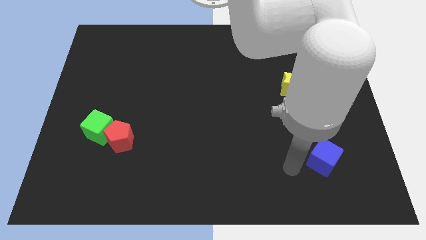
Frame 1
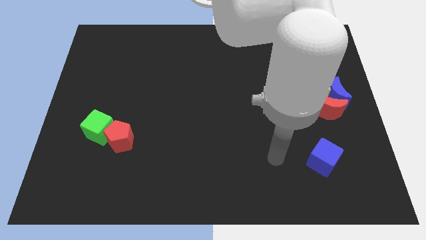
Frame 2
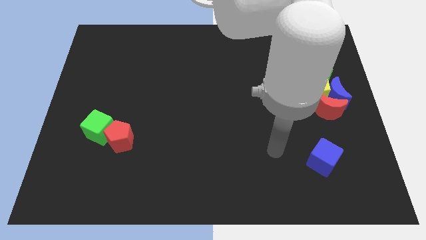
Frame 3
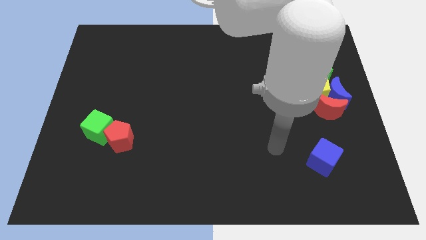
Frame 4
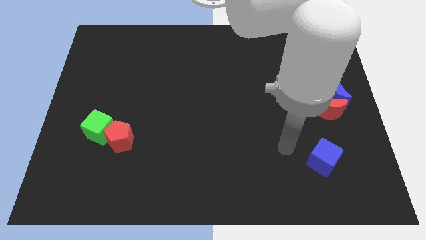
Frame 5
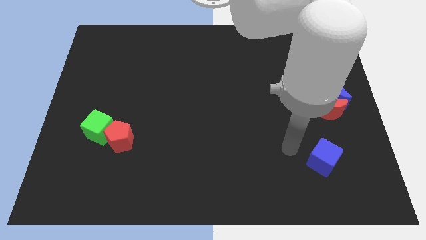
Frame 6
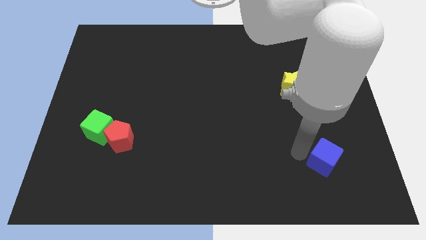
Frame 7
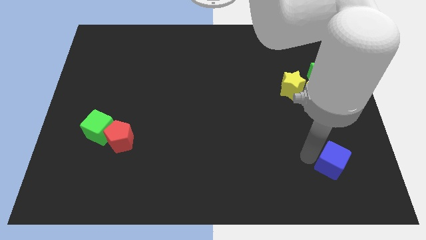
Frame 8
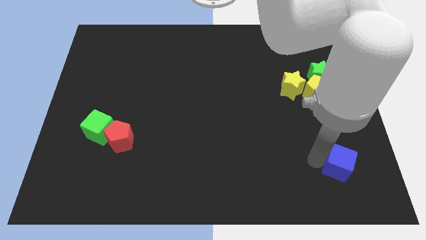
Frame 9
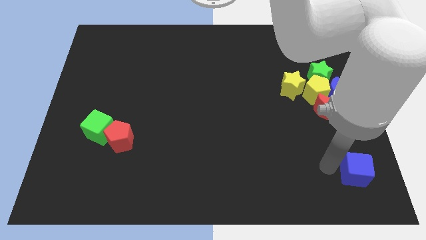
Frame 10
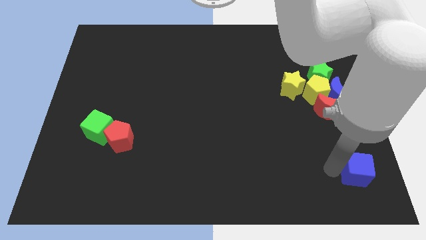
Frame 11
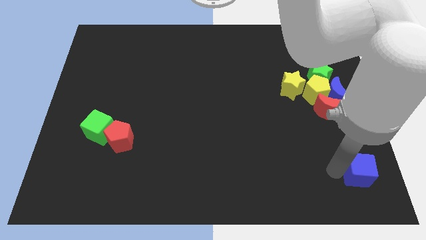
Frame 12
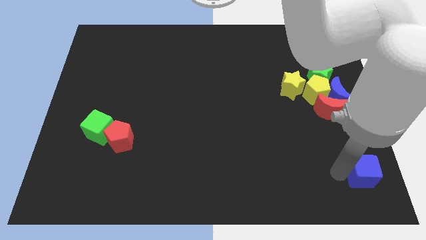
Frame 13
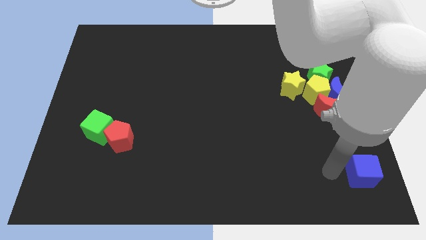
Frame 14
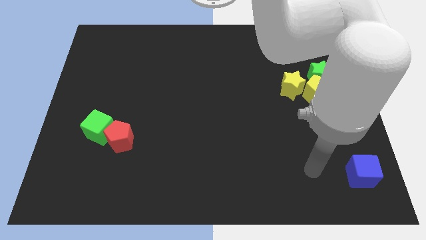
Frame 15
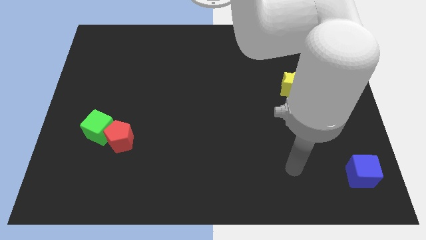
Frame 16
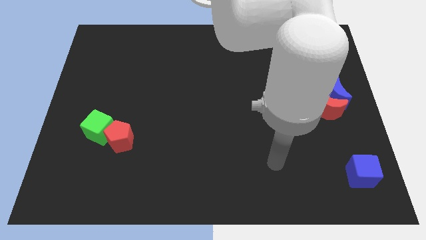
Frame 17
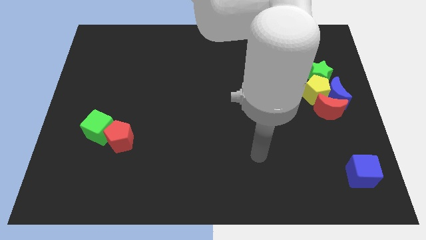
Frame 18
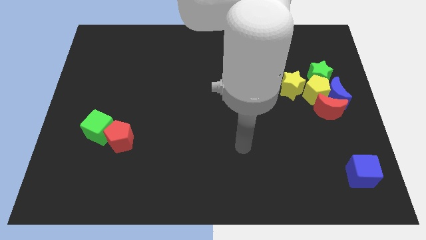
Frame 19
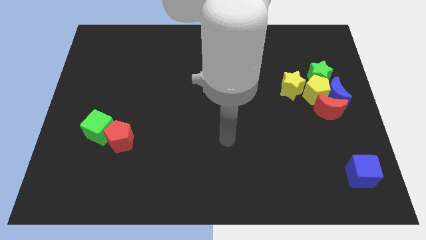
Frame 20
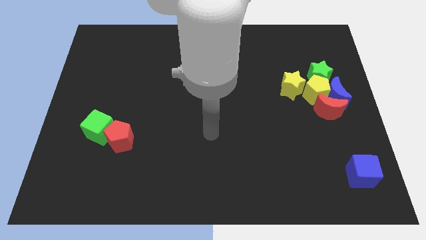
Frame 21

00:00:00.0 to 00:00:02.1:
move the blue cube towards the bottom right corner of the board

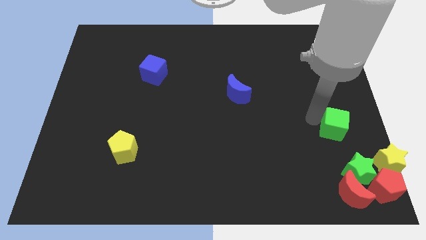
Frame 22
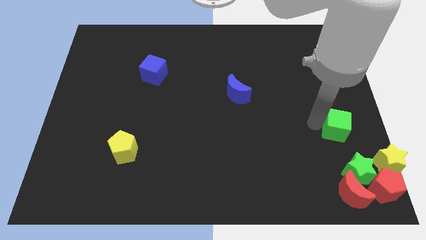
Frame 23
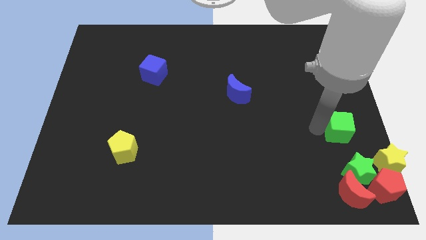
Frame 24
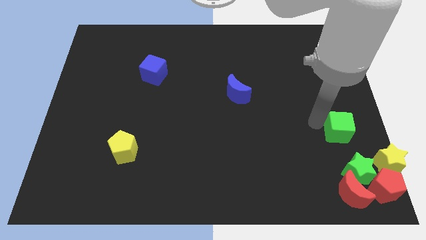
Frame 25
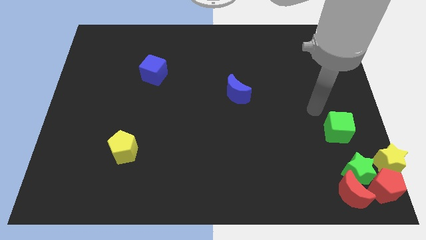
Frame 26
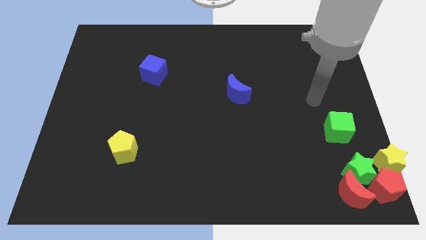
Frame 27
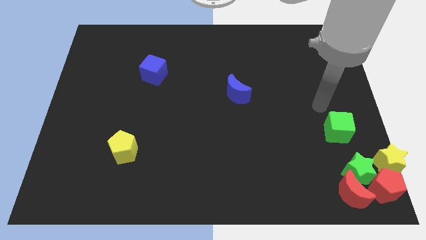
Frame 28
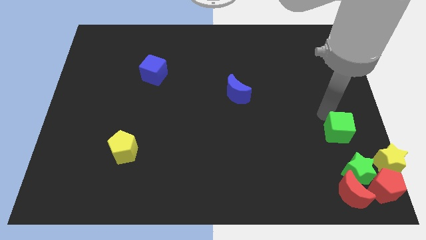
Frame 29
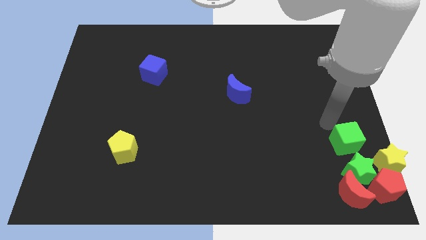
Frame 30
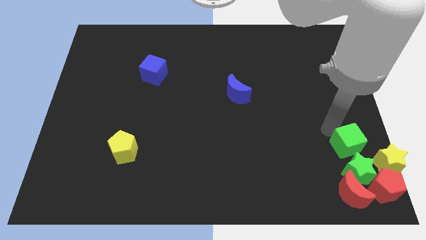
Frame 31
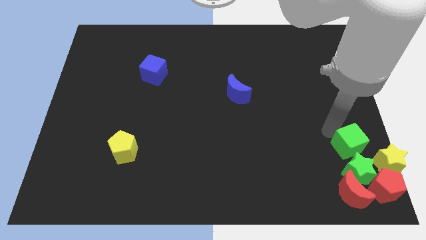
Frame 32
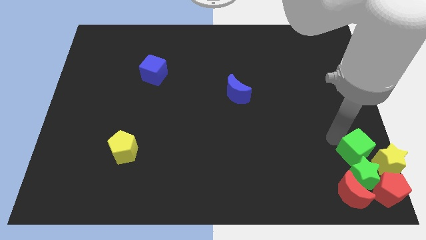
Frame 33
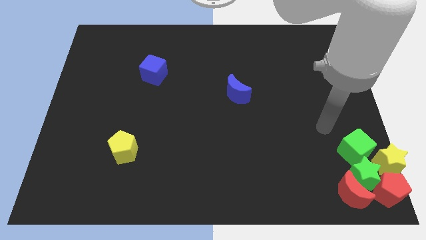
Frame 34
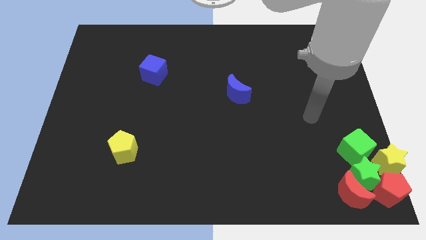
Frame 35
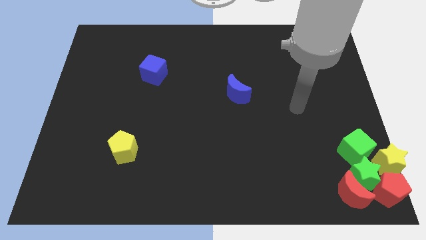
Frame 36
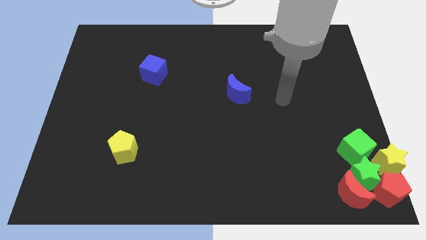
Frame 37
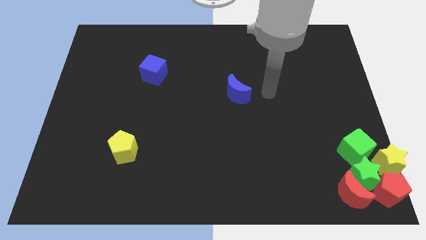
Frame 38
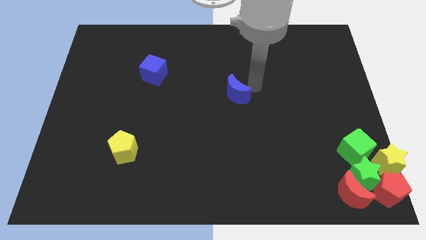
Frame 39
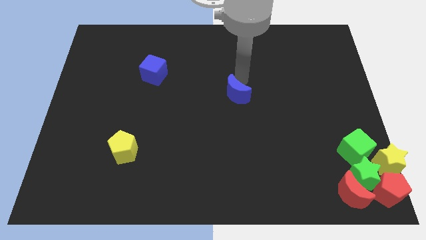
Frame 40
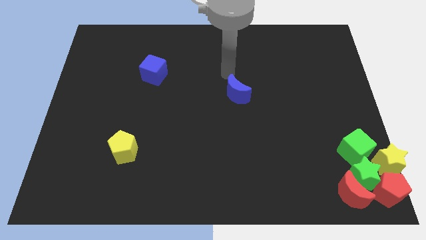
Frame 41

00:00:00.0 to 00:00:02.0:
push the green cube into the group of blocks

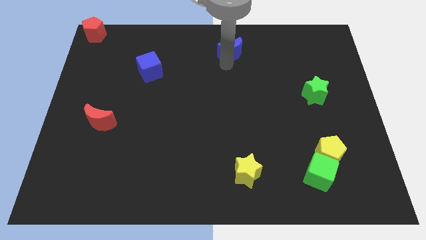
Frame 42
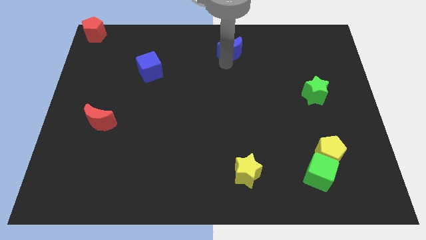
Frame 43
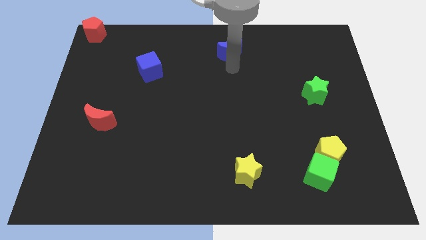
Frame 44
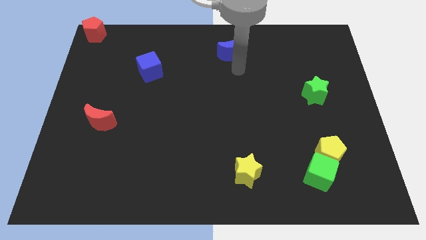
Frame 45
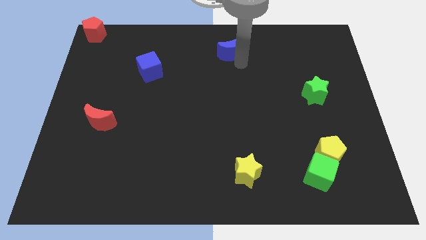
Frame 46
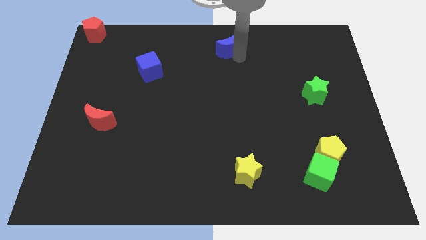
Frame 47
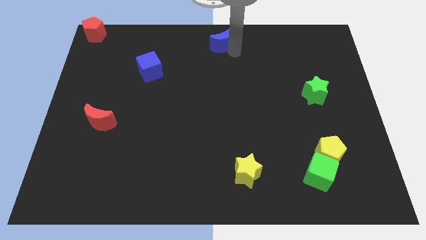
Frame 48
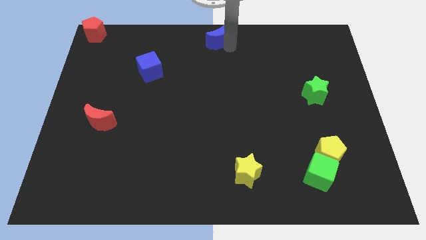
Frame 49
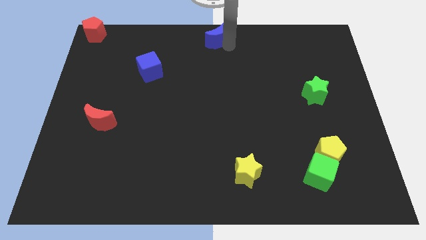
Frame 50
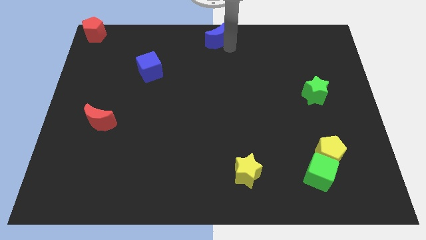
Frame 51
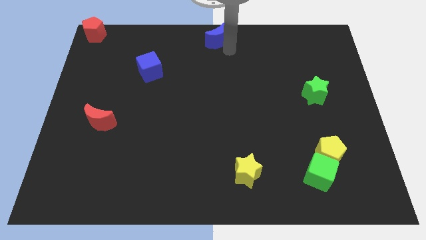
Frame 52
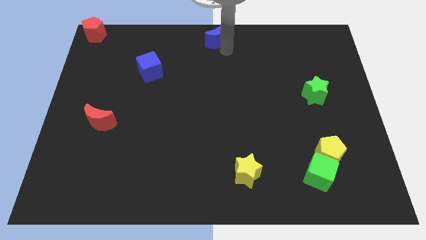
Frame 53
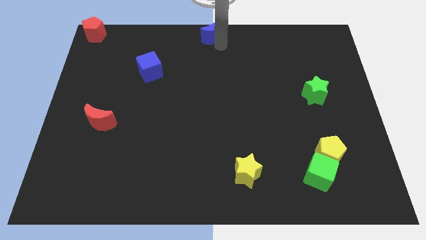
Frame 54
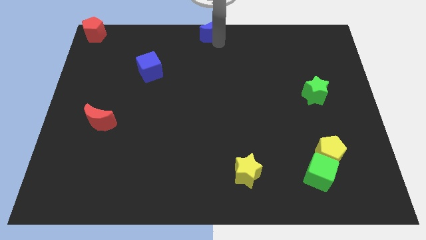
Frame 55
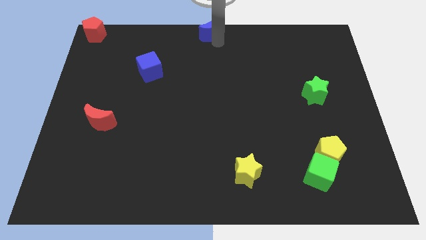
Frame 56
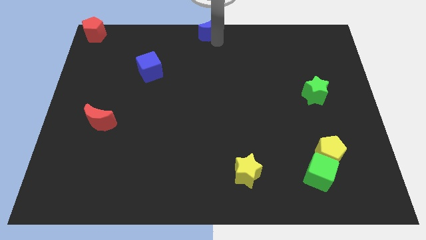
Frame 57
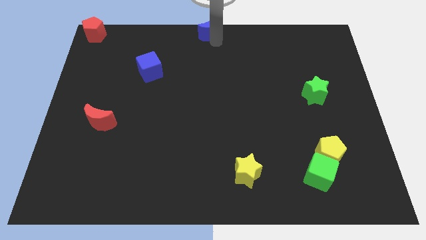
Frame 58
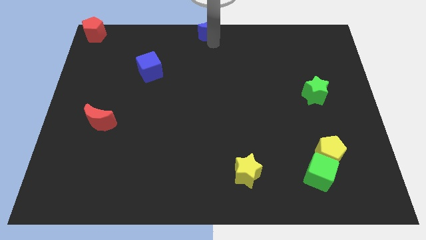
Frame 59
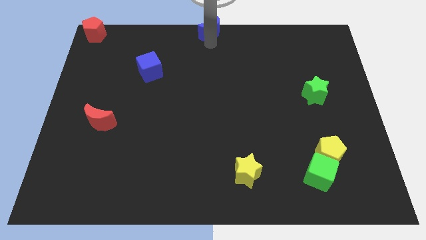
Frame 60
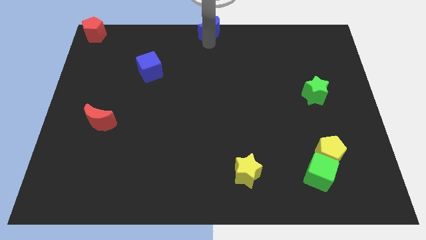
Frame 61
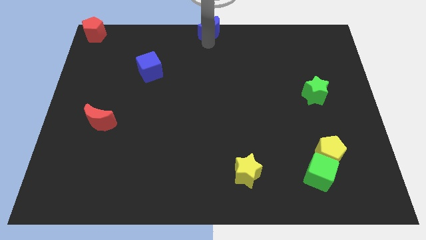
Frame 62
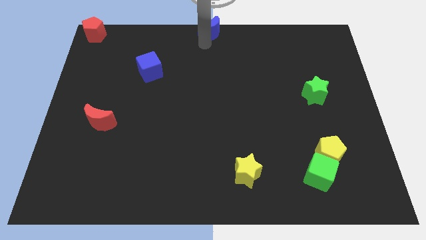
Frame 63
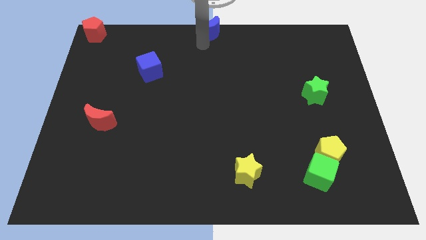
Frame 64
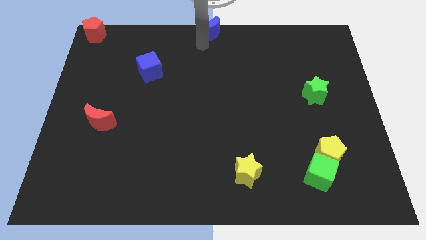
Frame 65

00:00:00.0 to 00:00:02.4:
push the blue moon to the top center of the board

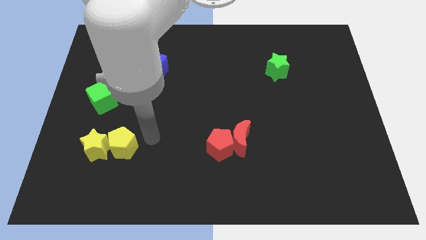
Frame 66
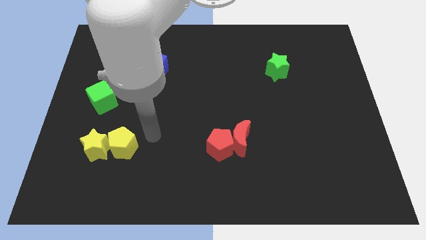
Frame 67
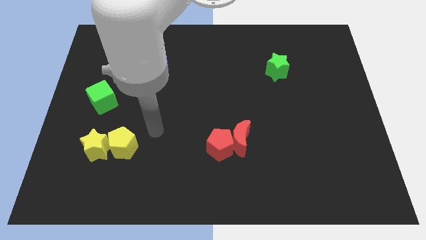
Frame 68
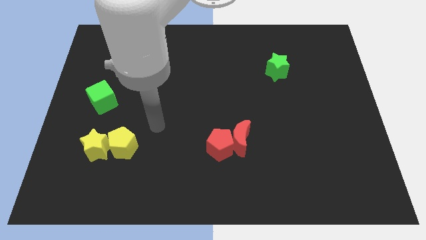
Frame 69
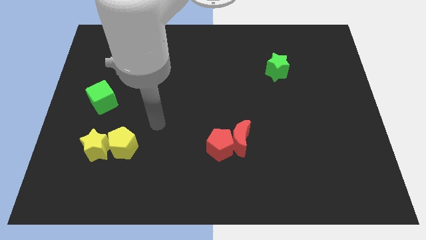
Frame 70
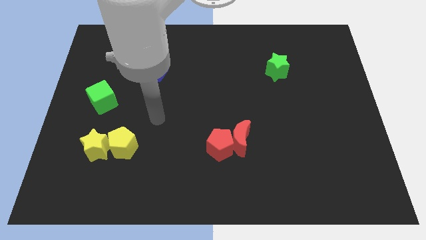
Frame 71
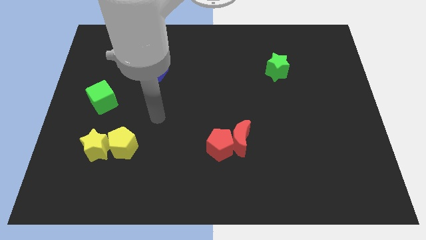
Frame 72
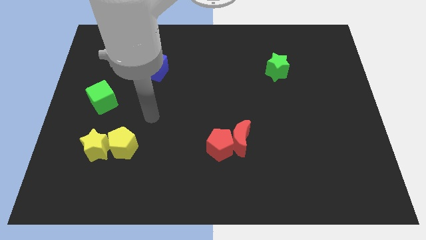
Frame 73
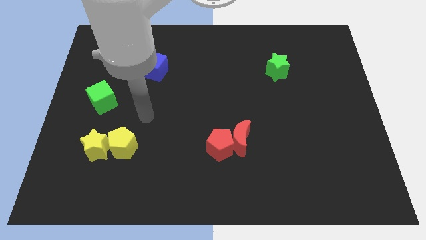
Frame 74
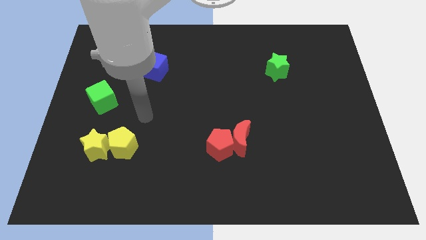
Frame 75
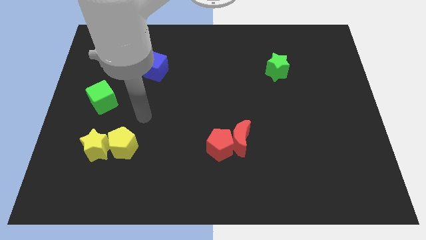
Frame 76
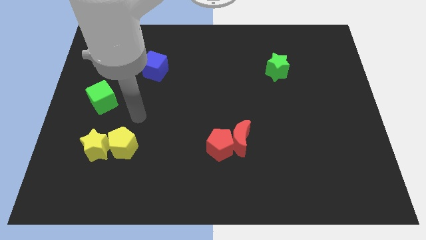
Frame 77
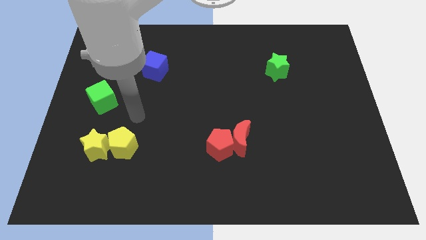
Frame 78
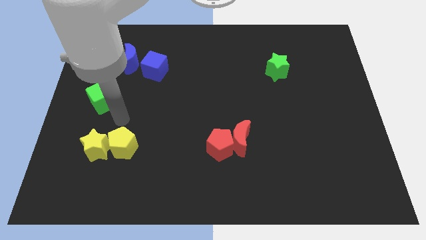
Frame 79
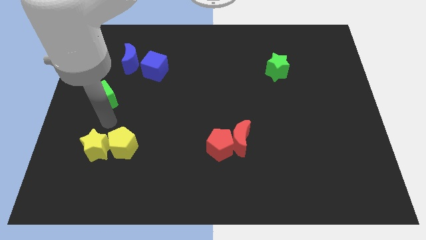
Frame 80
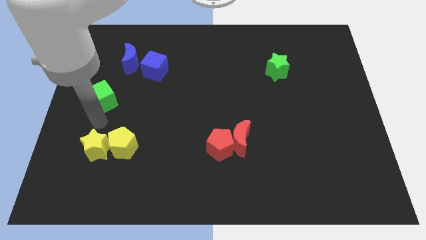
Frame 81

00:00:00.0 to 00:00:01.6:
move your arm to the bottom of the green cube

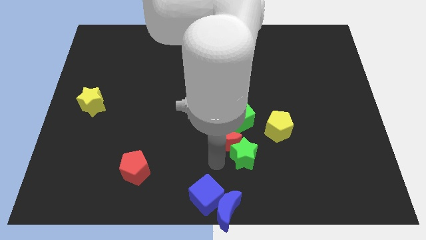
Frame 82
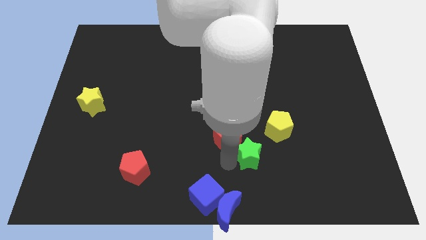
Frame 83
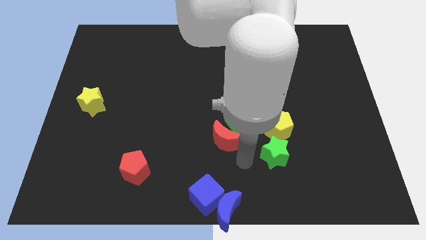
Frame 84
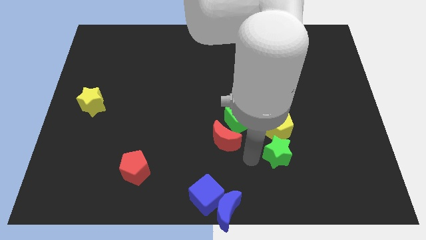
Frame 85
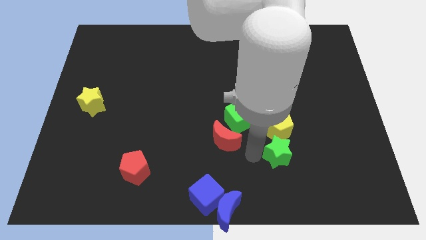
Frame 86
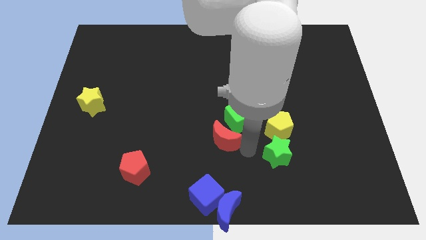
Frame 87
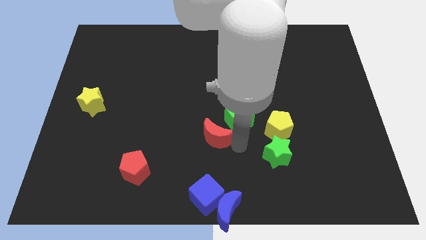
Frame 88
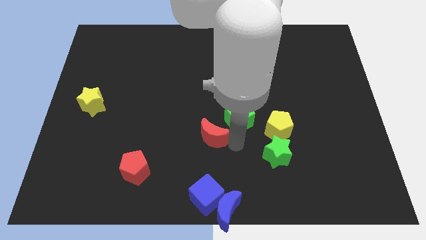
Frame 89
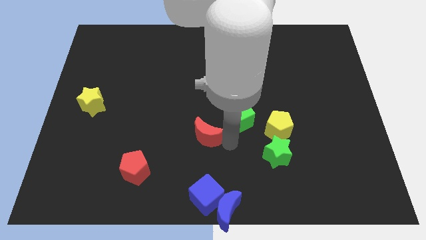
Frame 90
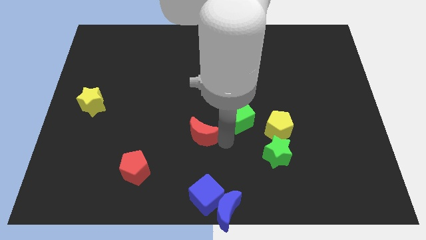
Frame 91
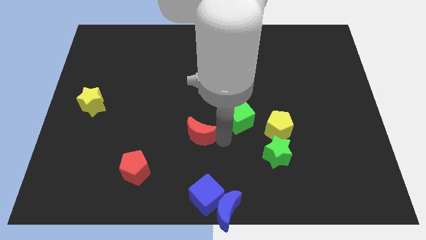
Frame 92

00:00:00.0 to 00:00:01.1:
separate red moon and green star from each other
